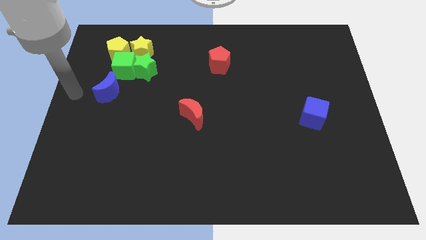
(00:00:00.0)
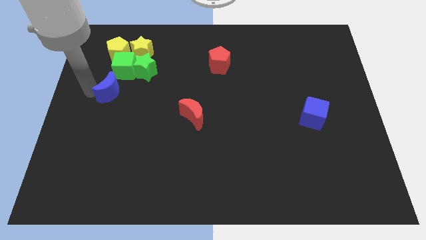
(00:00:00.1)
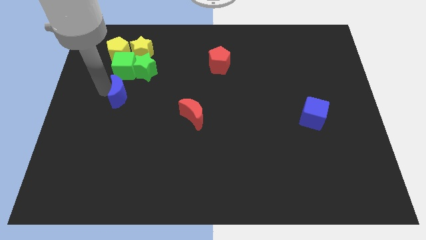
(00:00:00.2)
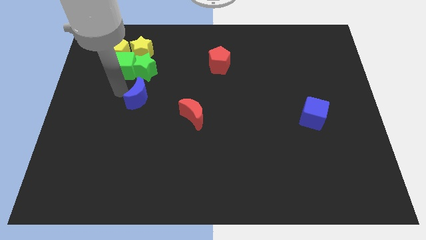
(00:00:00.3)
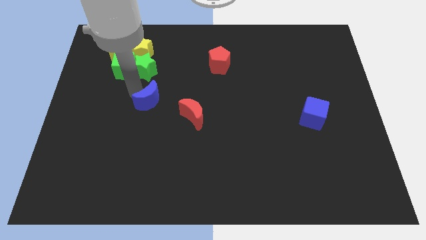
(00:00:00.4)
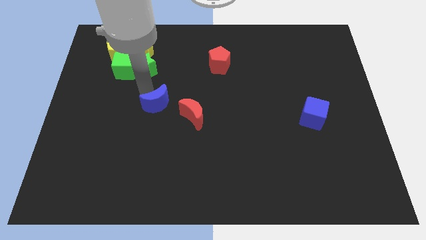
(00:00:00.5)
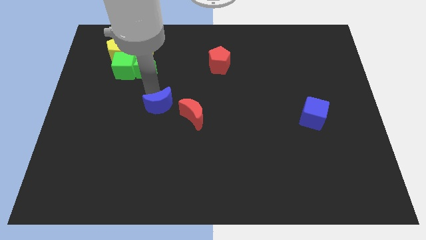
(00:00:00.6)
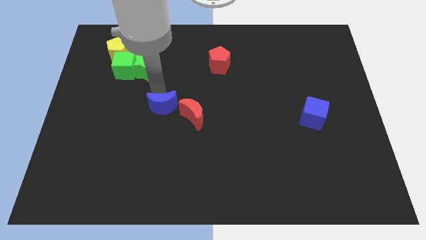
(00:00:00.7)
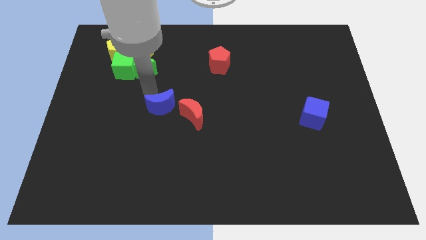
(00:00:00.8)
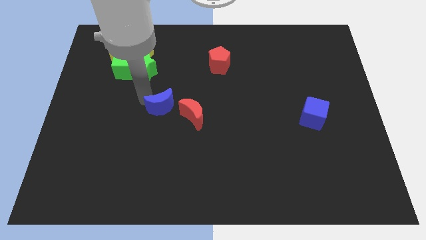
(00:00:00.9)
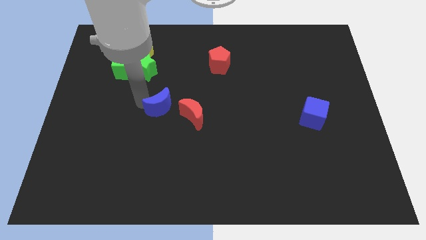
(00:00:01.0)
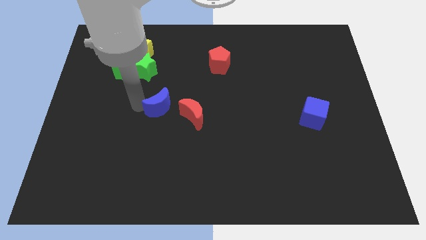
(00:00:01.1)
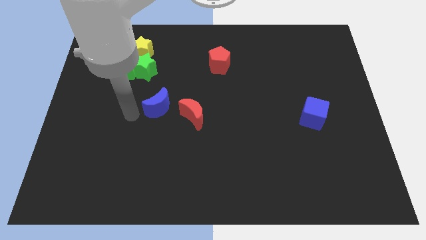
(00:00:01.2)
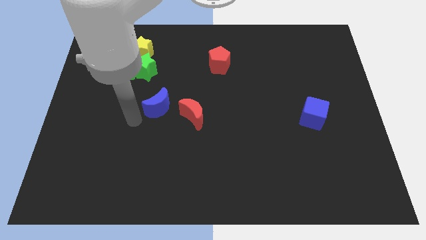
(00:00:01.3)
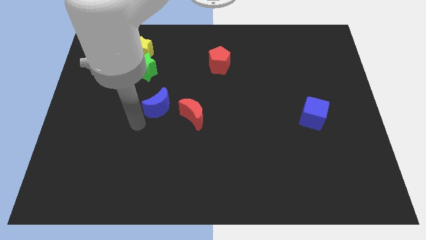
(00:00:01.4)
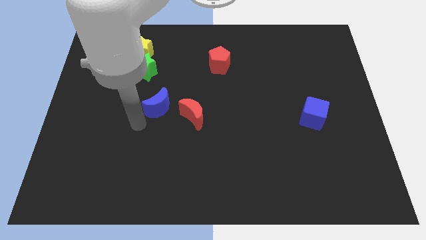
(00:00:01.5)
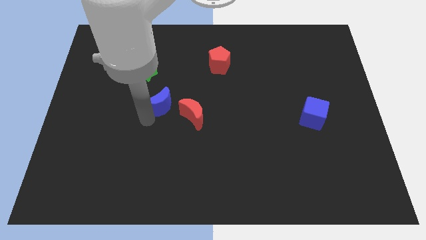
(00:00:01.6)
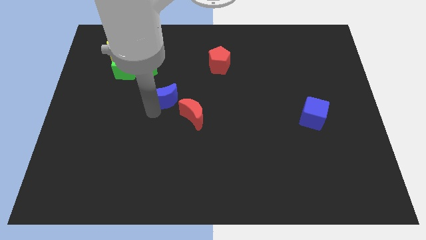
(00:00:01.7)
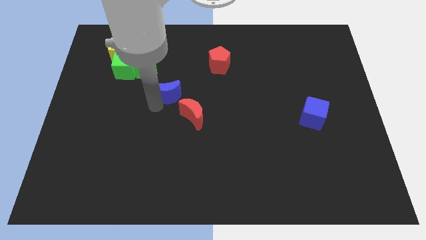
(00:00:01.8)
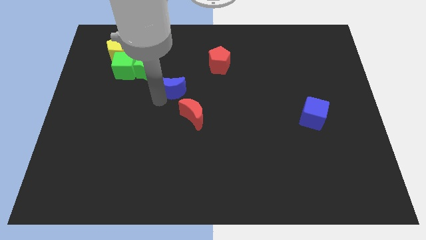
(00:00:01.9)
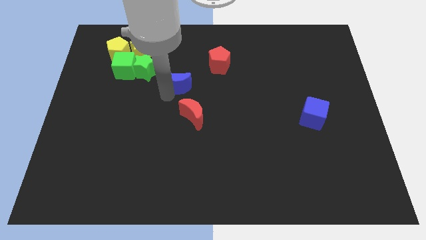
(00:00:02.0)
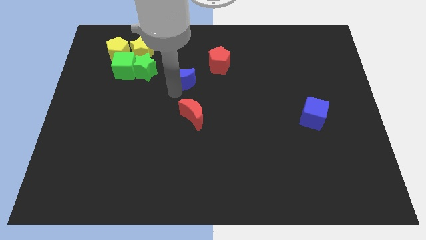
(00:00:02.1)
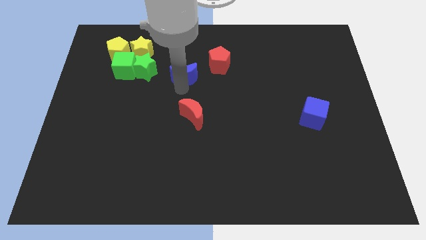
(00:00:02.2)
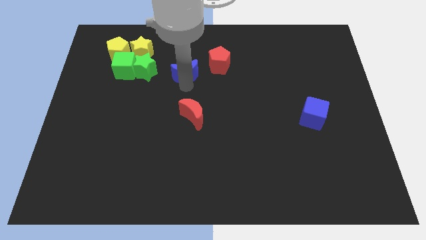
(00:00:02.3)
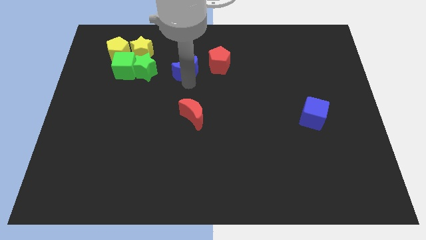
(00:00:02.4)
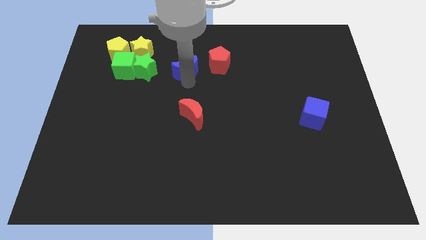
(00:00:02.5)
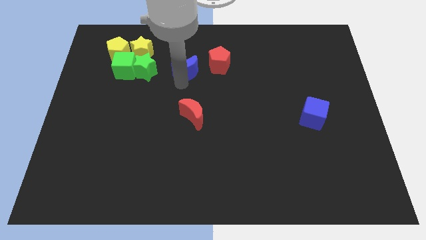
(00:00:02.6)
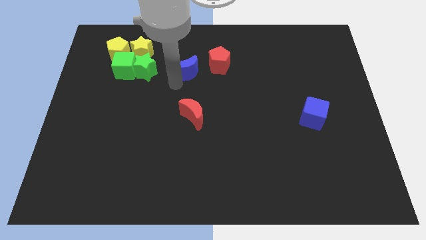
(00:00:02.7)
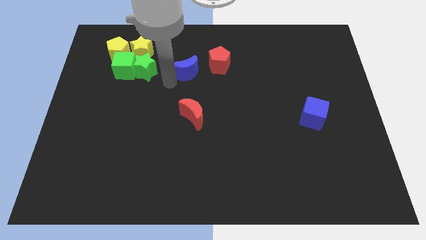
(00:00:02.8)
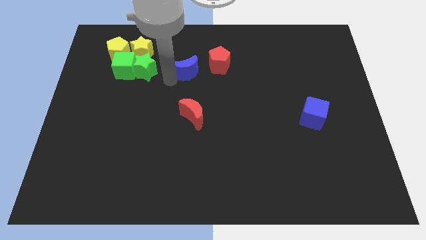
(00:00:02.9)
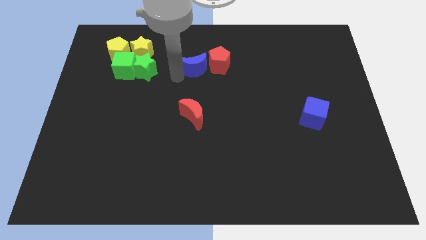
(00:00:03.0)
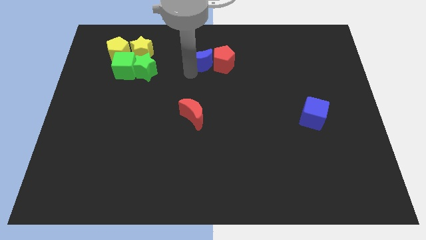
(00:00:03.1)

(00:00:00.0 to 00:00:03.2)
put the blue moon to the left side of the red pentagon

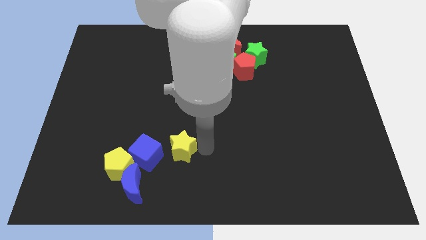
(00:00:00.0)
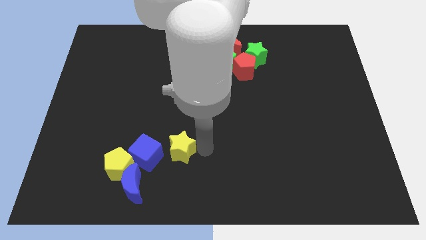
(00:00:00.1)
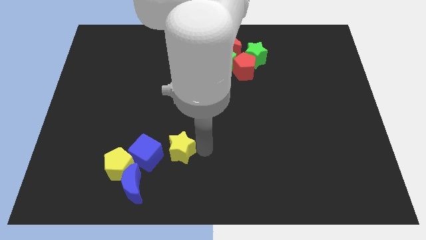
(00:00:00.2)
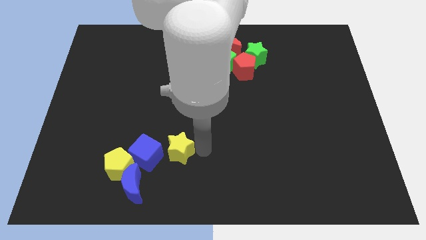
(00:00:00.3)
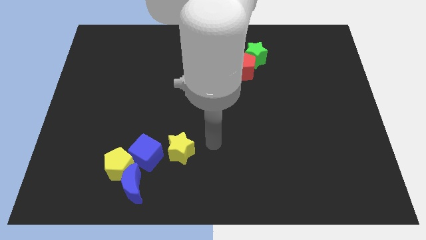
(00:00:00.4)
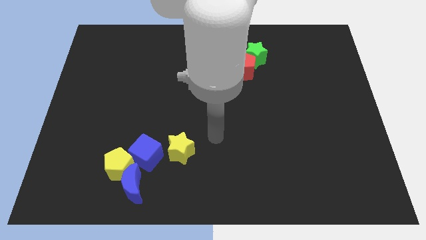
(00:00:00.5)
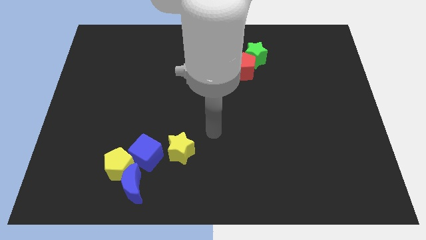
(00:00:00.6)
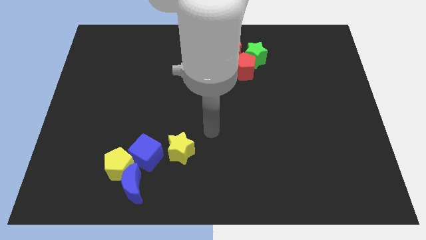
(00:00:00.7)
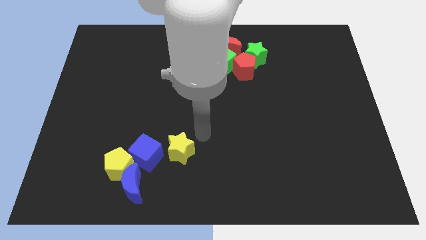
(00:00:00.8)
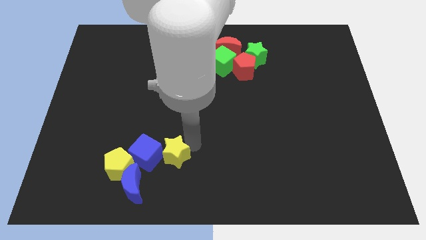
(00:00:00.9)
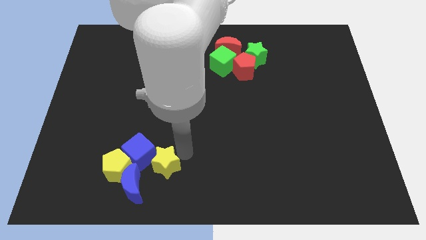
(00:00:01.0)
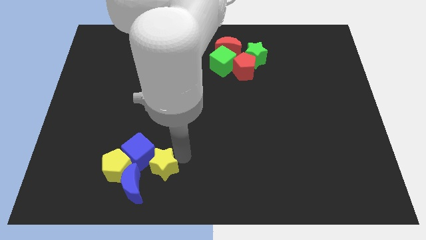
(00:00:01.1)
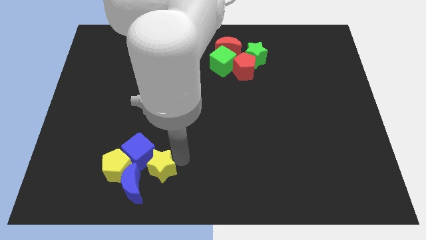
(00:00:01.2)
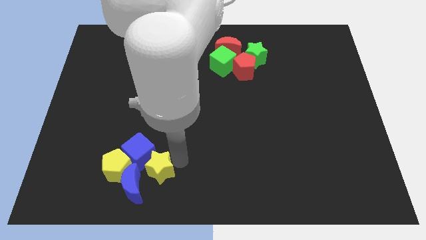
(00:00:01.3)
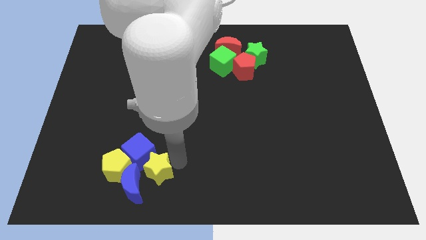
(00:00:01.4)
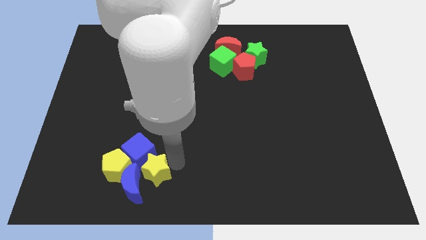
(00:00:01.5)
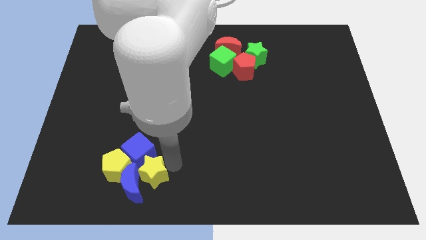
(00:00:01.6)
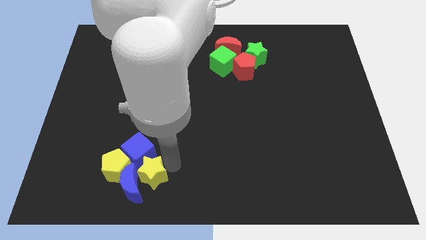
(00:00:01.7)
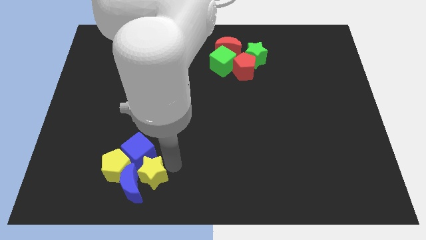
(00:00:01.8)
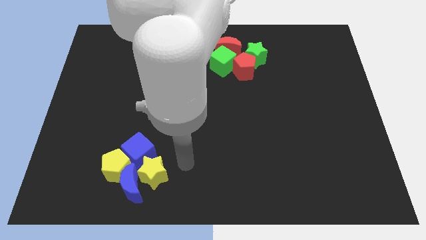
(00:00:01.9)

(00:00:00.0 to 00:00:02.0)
push the yellow star into the blue moon

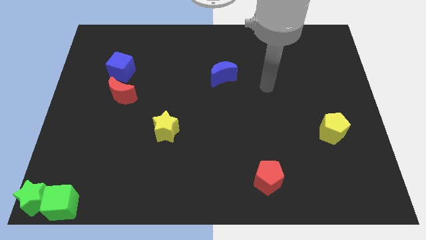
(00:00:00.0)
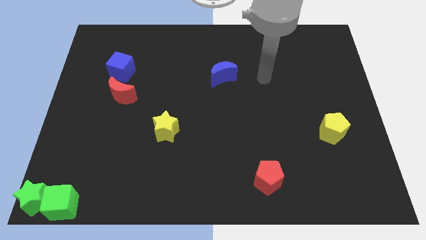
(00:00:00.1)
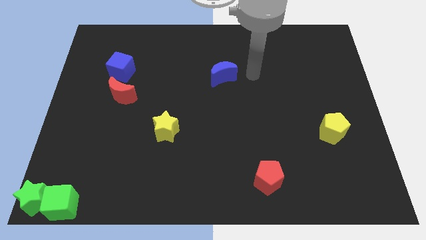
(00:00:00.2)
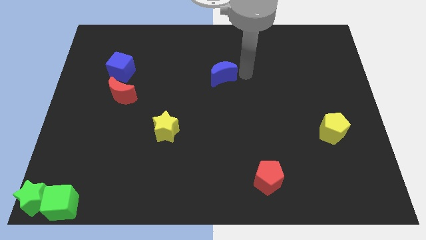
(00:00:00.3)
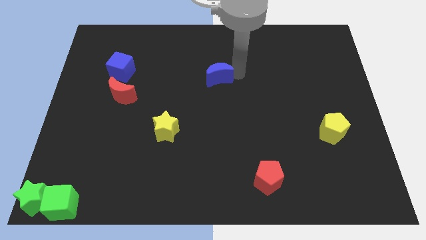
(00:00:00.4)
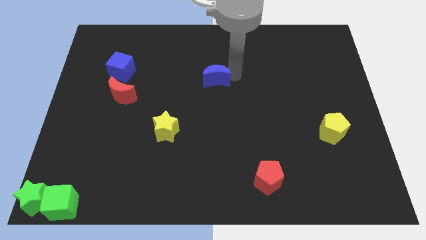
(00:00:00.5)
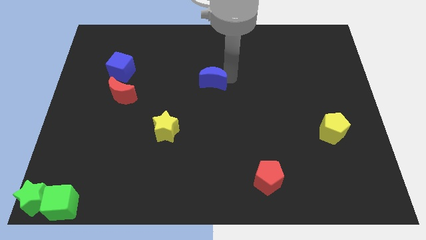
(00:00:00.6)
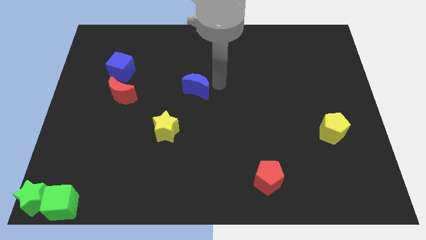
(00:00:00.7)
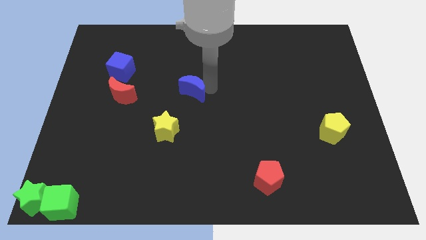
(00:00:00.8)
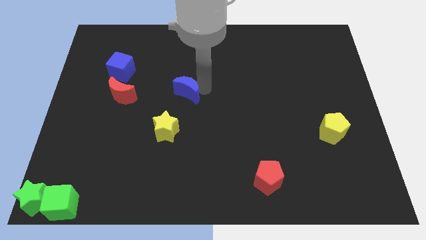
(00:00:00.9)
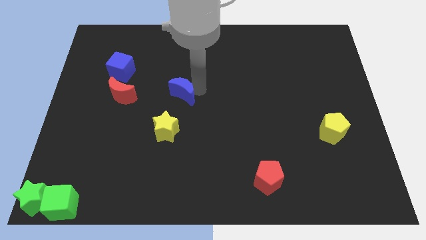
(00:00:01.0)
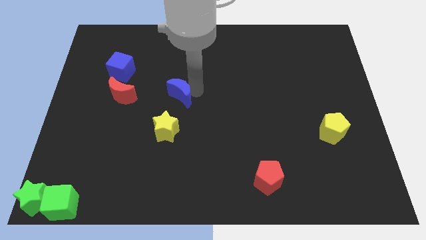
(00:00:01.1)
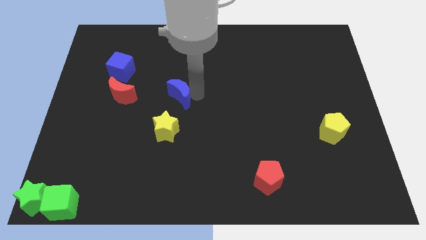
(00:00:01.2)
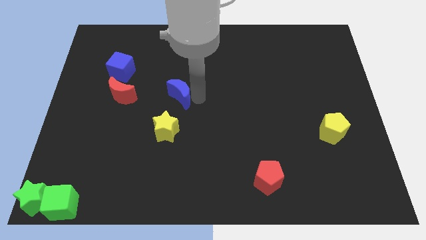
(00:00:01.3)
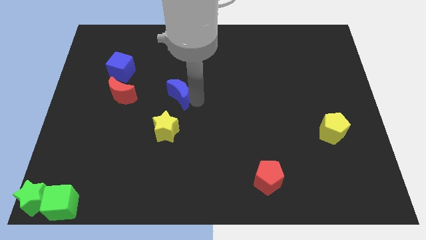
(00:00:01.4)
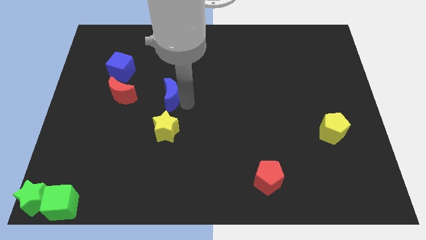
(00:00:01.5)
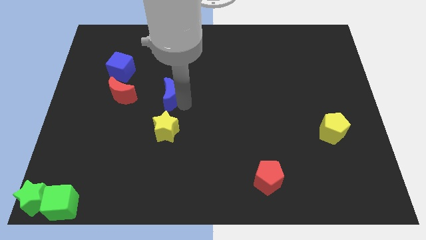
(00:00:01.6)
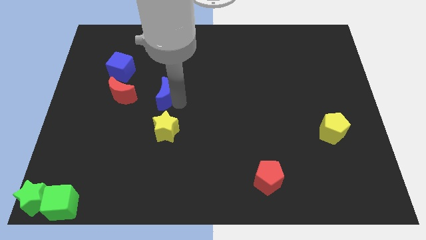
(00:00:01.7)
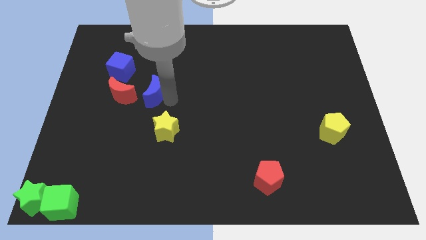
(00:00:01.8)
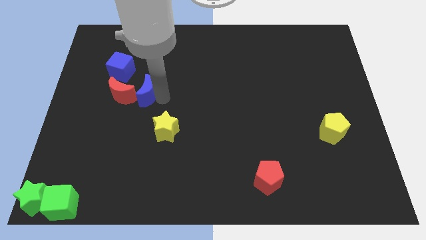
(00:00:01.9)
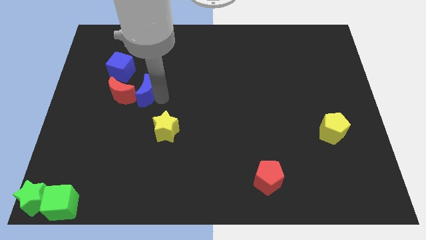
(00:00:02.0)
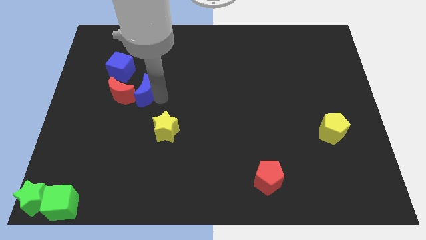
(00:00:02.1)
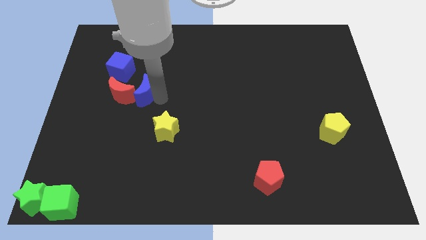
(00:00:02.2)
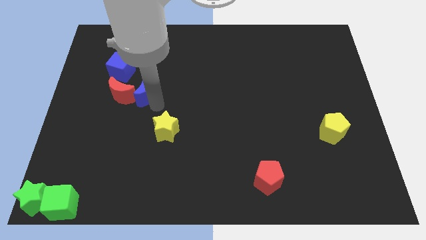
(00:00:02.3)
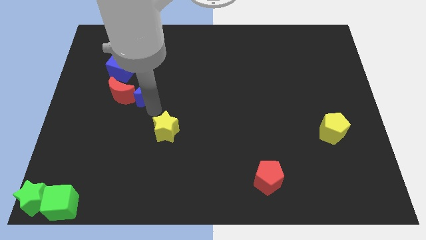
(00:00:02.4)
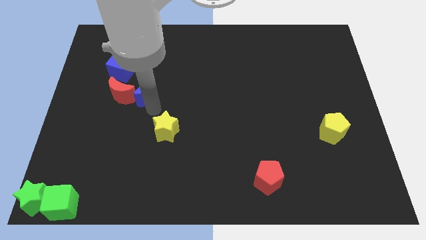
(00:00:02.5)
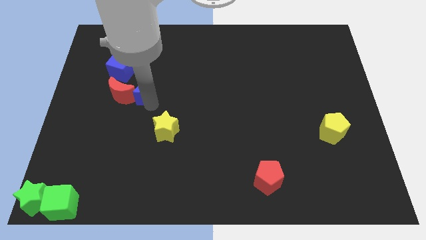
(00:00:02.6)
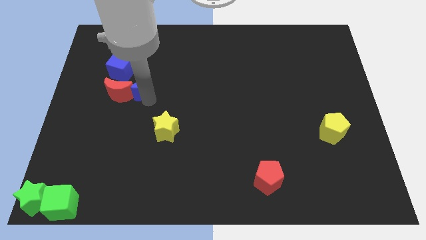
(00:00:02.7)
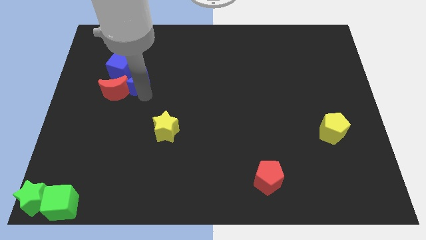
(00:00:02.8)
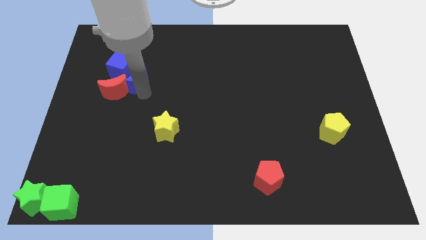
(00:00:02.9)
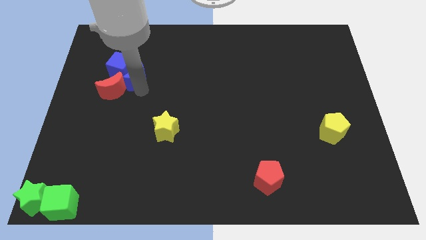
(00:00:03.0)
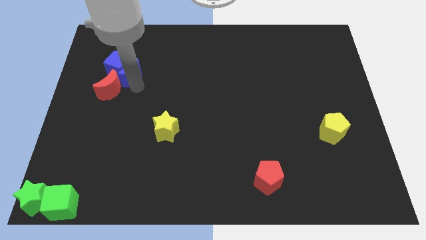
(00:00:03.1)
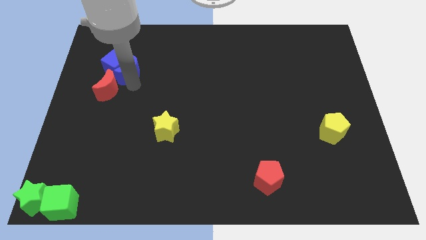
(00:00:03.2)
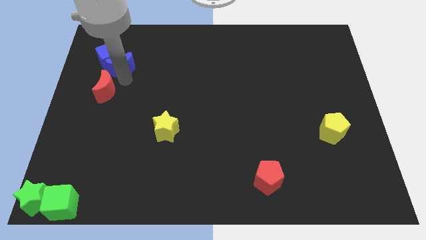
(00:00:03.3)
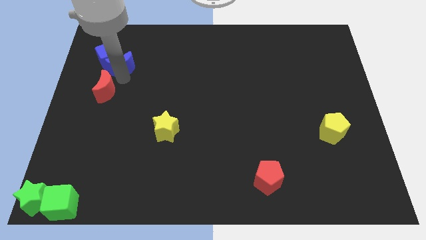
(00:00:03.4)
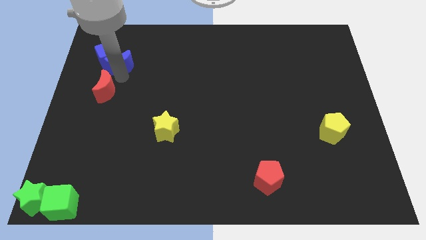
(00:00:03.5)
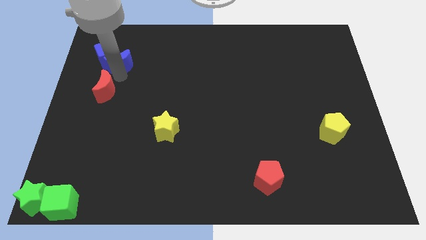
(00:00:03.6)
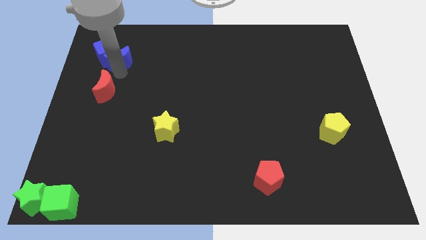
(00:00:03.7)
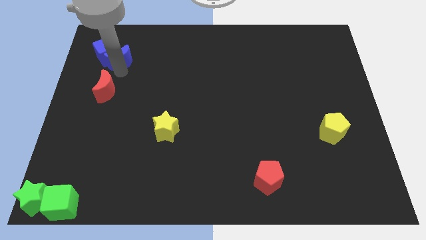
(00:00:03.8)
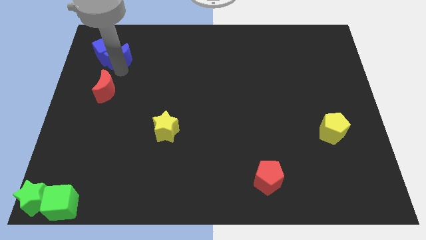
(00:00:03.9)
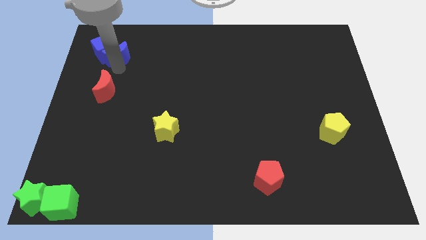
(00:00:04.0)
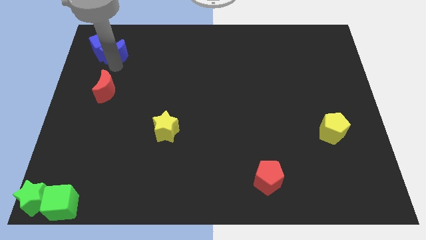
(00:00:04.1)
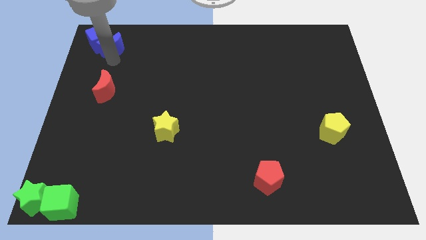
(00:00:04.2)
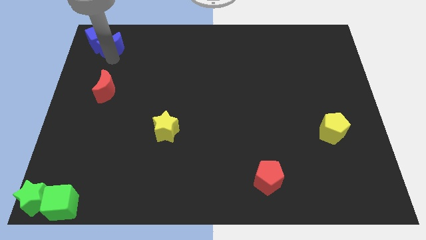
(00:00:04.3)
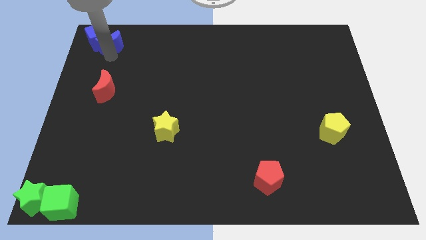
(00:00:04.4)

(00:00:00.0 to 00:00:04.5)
push blue crescent into the blue cube
